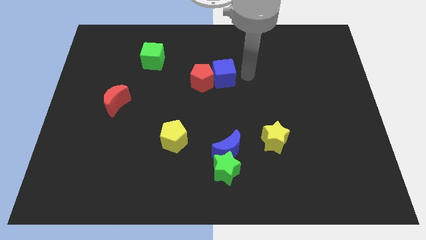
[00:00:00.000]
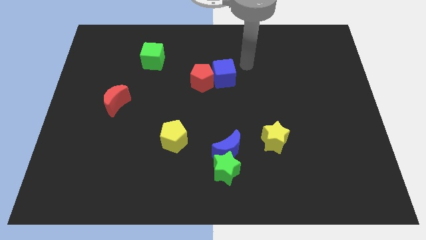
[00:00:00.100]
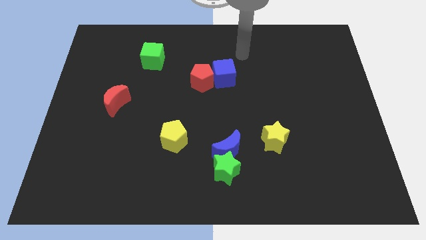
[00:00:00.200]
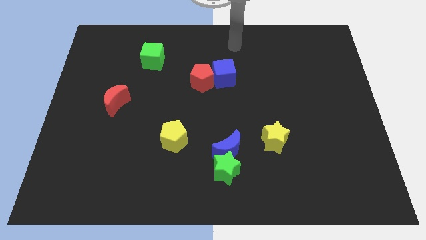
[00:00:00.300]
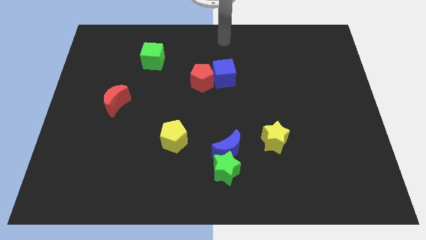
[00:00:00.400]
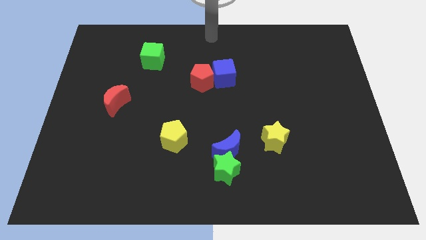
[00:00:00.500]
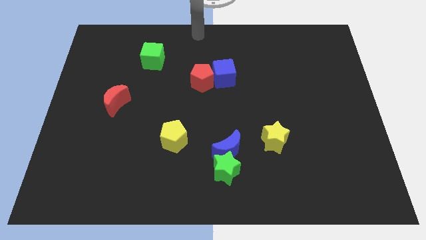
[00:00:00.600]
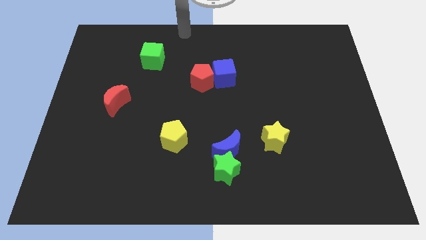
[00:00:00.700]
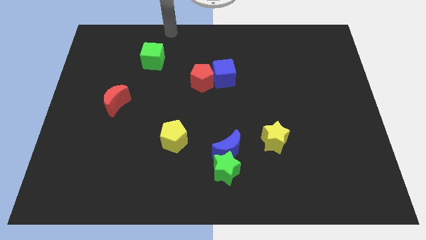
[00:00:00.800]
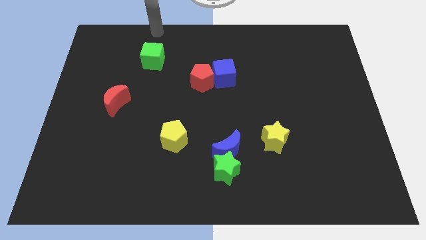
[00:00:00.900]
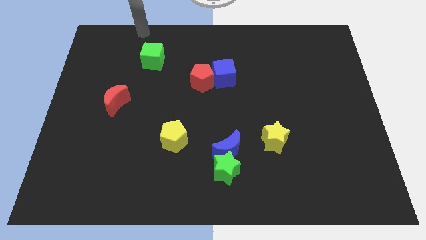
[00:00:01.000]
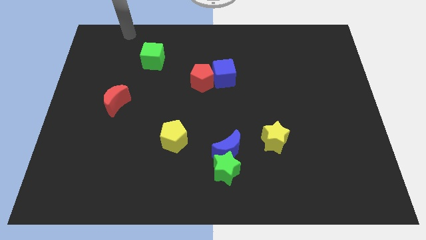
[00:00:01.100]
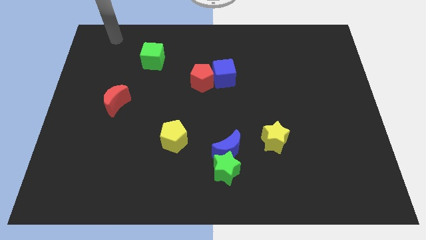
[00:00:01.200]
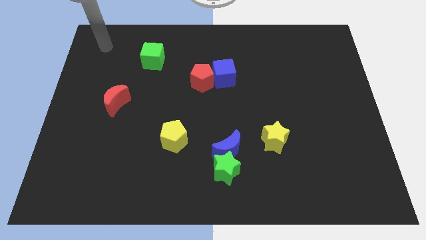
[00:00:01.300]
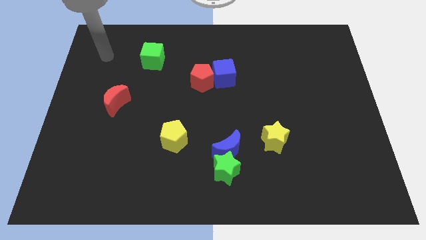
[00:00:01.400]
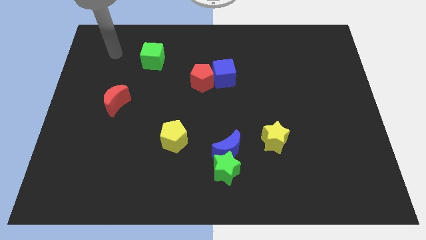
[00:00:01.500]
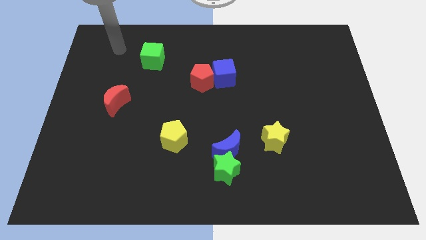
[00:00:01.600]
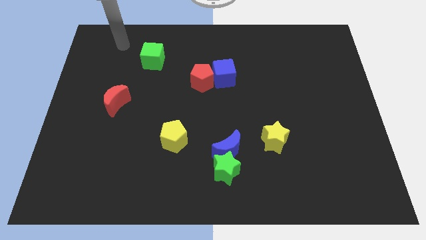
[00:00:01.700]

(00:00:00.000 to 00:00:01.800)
move the arm towards the green cube

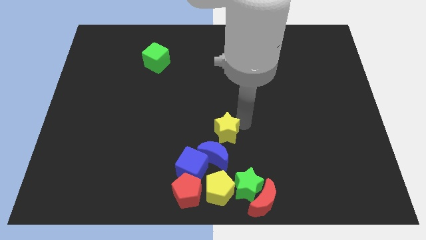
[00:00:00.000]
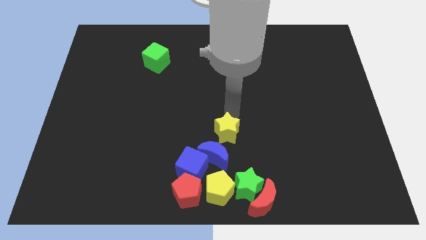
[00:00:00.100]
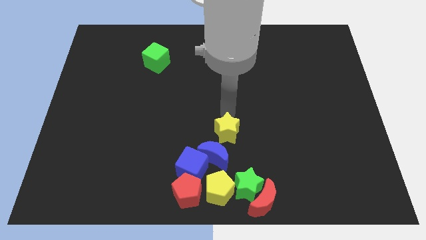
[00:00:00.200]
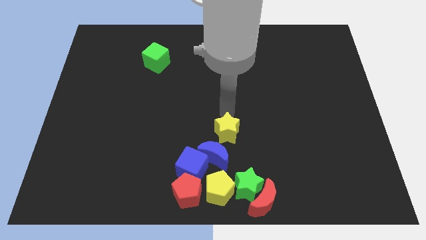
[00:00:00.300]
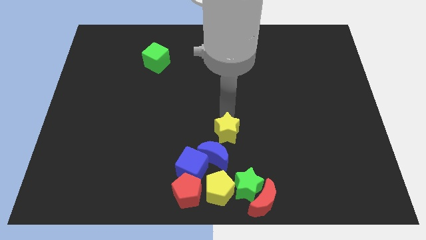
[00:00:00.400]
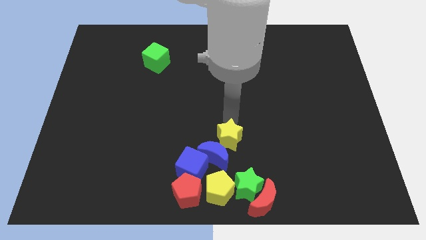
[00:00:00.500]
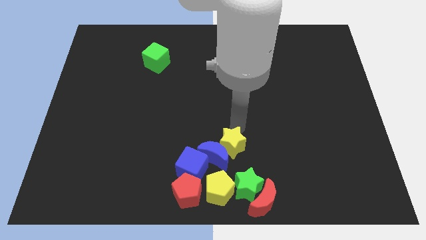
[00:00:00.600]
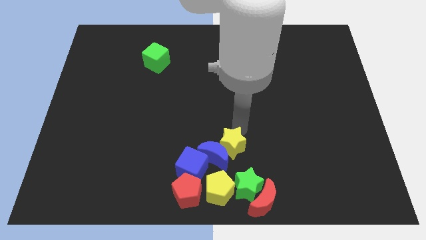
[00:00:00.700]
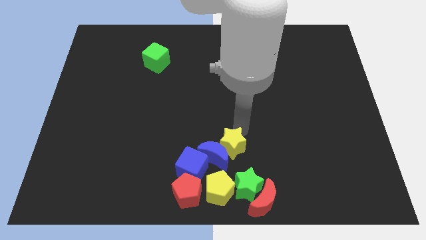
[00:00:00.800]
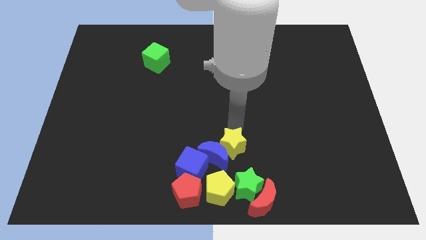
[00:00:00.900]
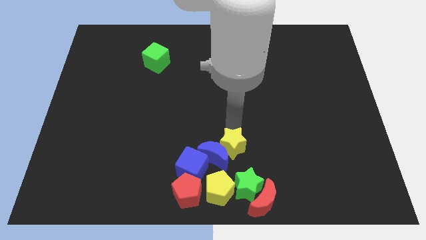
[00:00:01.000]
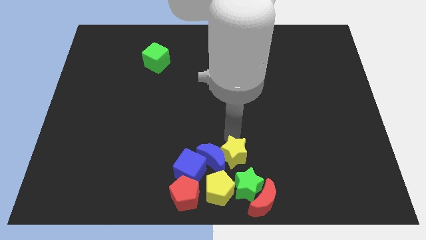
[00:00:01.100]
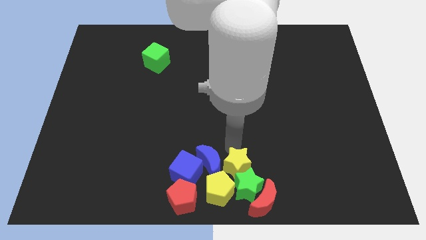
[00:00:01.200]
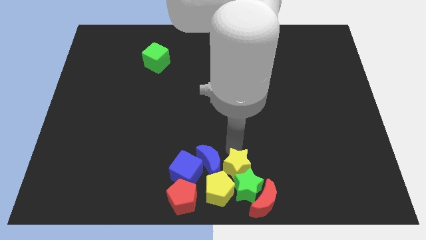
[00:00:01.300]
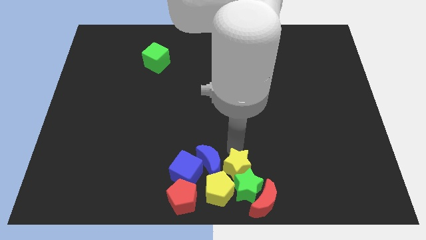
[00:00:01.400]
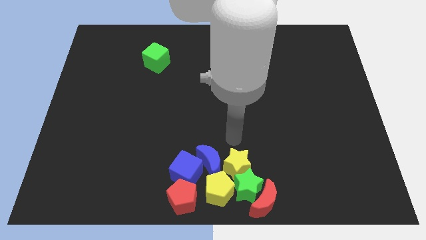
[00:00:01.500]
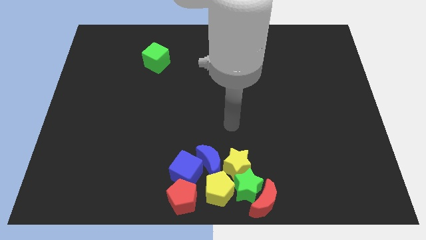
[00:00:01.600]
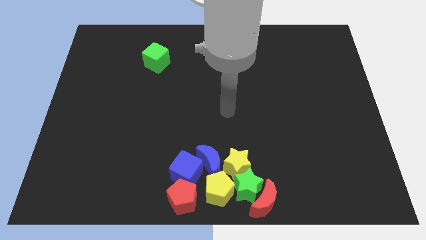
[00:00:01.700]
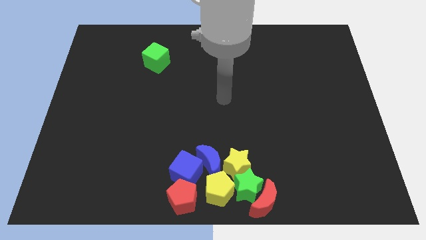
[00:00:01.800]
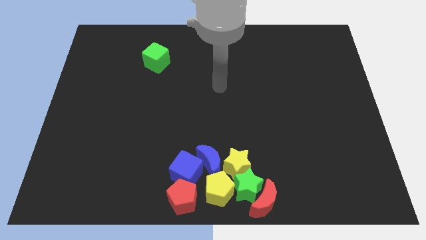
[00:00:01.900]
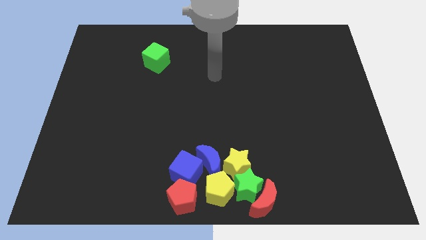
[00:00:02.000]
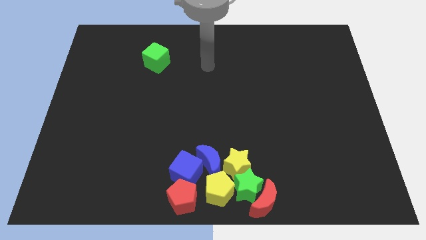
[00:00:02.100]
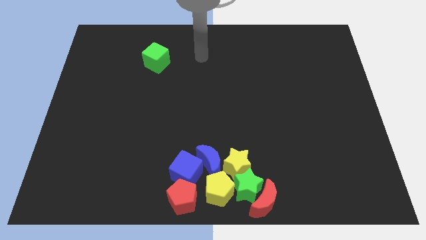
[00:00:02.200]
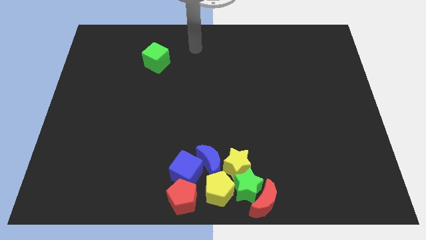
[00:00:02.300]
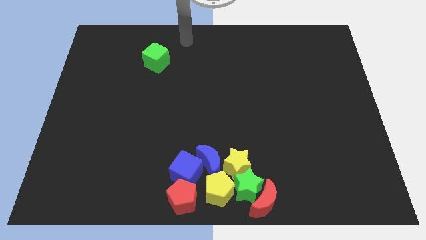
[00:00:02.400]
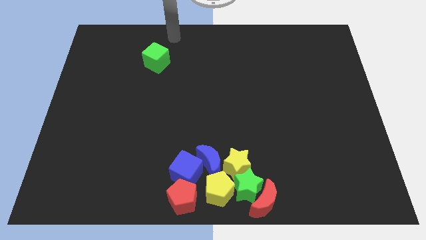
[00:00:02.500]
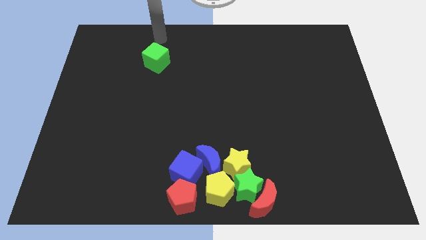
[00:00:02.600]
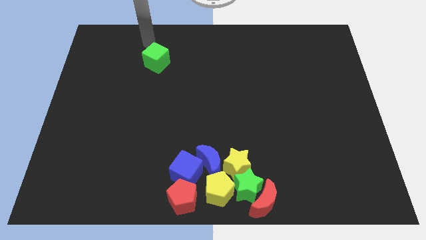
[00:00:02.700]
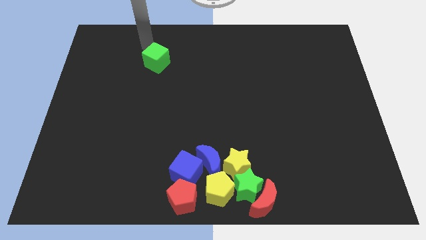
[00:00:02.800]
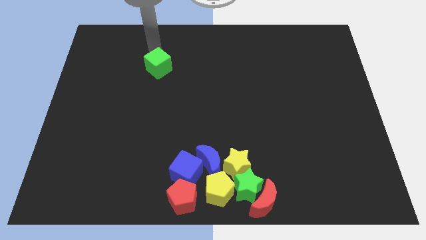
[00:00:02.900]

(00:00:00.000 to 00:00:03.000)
push the yellow star into the top side of the green star

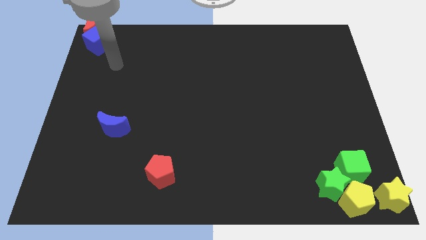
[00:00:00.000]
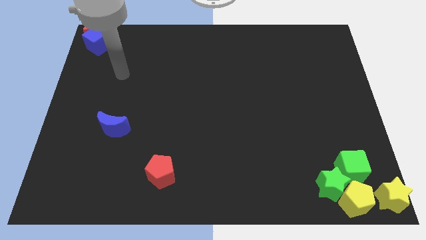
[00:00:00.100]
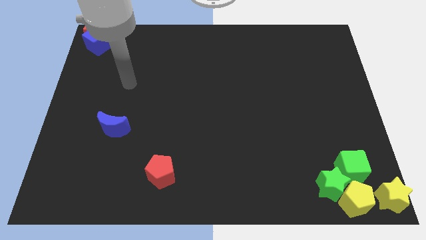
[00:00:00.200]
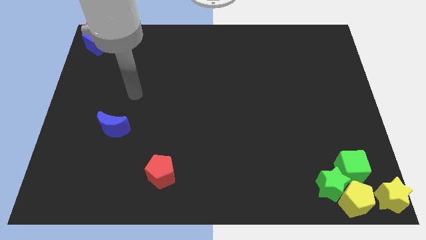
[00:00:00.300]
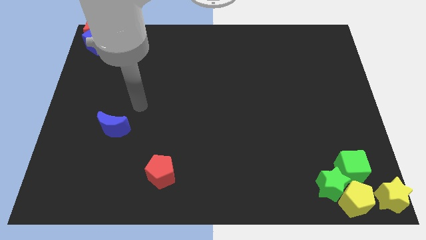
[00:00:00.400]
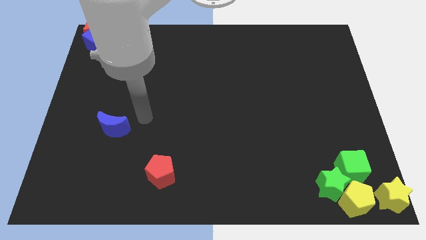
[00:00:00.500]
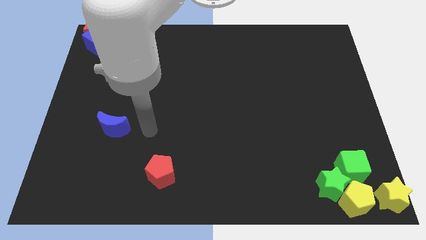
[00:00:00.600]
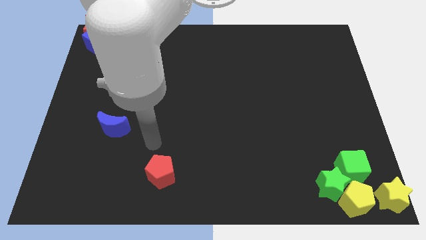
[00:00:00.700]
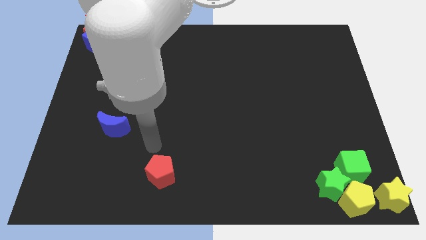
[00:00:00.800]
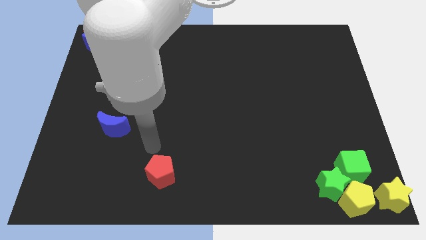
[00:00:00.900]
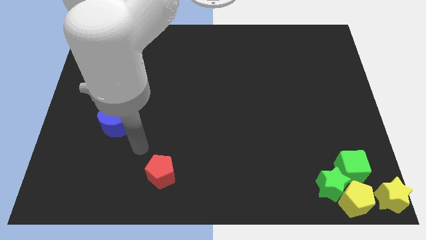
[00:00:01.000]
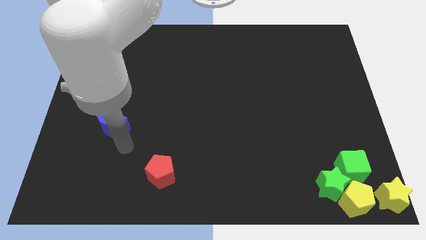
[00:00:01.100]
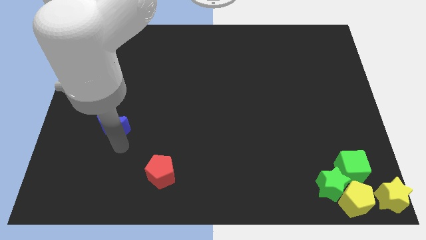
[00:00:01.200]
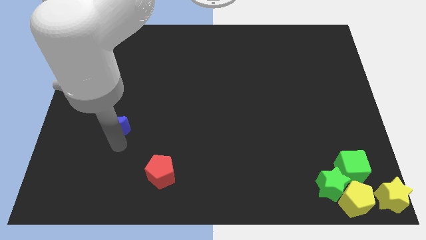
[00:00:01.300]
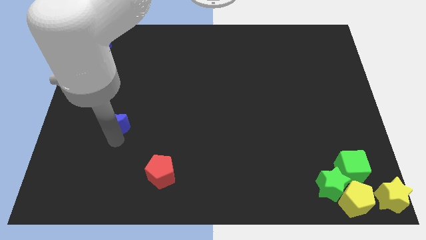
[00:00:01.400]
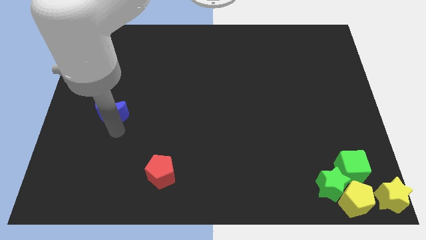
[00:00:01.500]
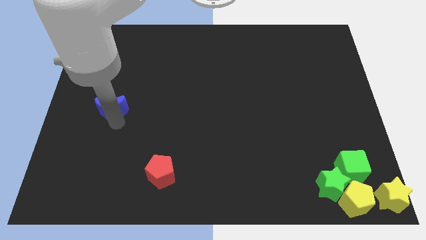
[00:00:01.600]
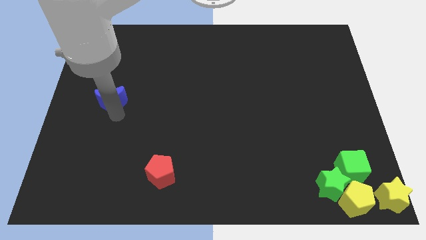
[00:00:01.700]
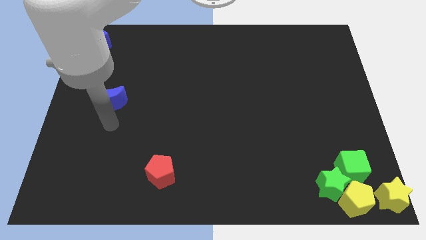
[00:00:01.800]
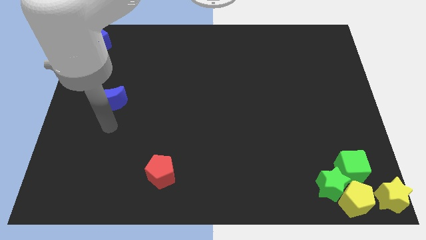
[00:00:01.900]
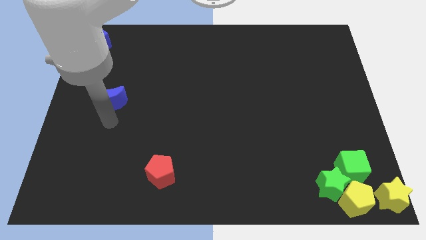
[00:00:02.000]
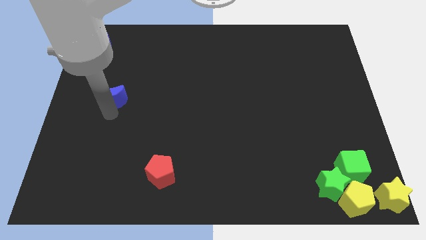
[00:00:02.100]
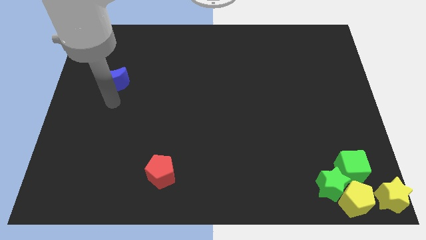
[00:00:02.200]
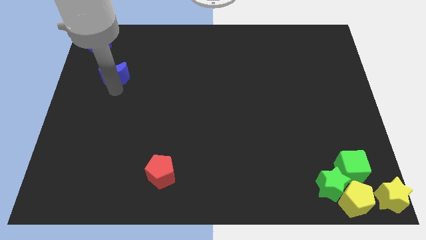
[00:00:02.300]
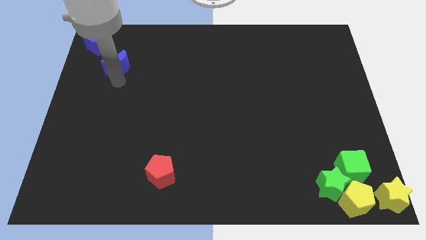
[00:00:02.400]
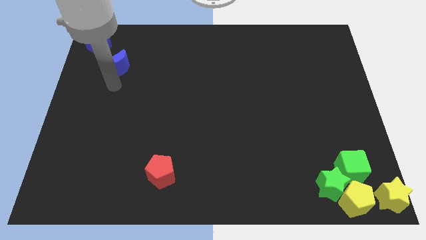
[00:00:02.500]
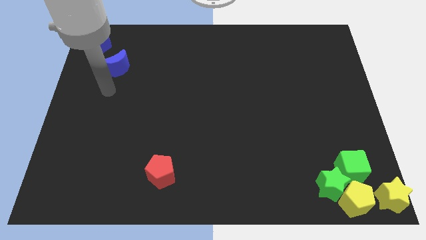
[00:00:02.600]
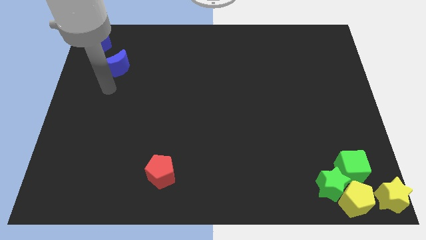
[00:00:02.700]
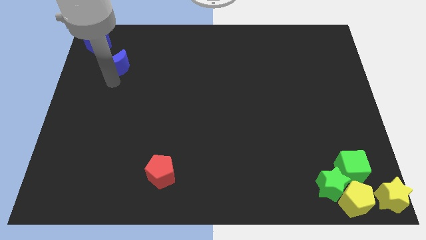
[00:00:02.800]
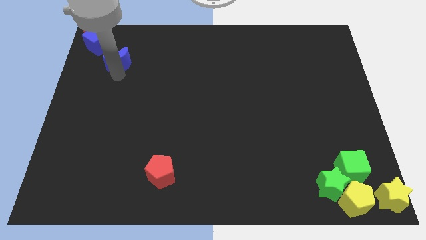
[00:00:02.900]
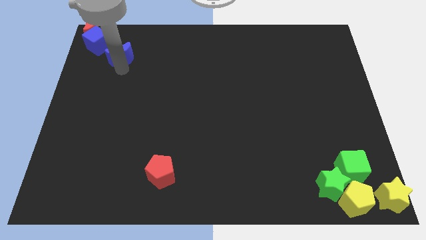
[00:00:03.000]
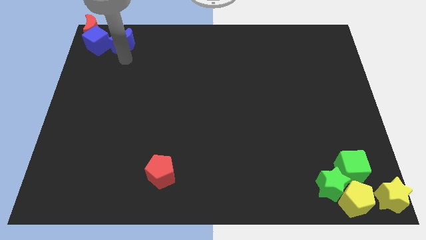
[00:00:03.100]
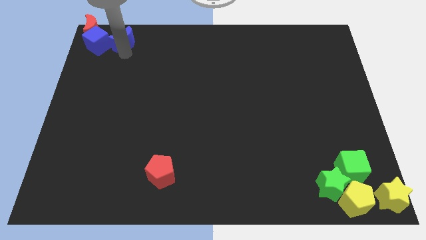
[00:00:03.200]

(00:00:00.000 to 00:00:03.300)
move the blue moon towards top left corner of the board

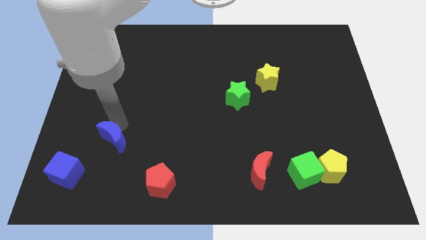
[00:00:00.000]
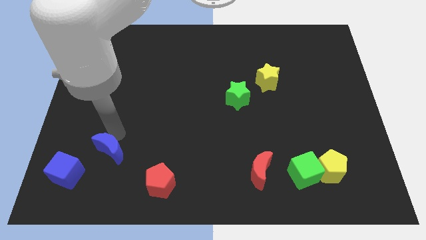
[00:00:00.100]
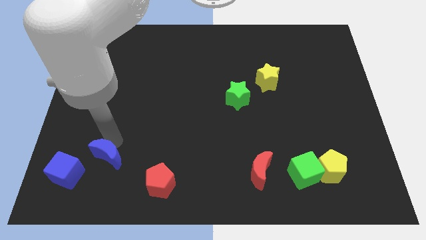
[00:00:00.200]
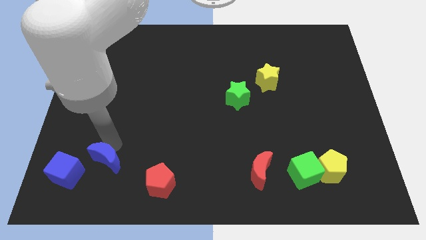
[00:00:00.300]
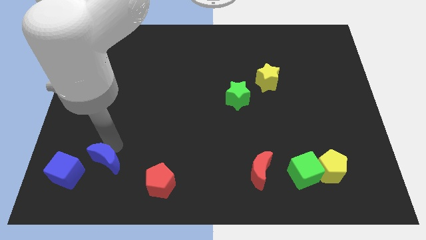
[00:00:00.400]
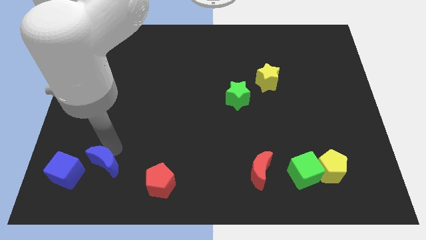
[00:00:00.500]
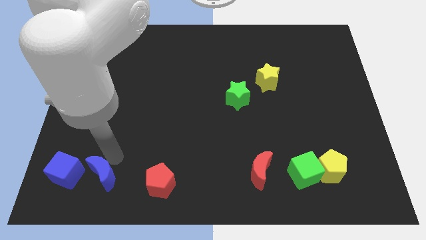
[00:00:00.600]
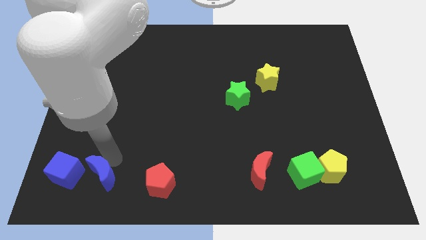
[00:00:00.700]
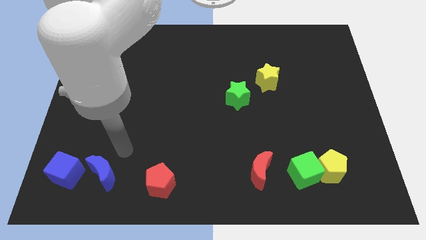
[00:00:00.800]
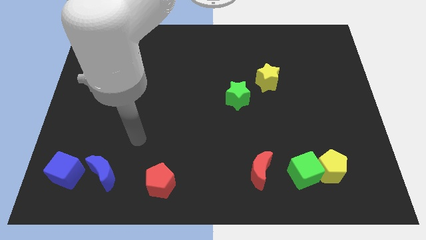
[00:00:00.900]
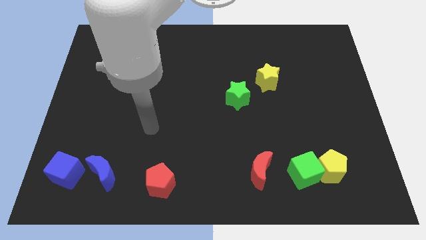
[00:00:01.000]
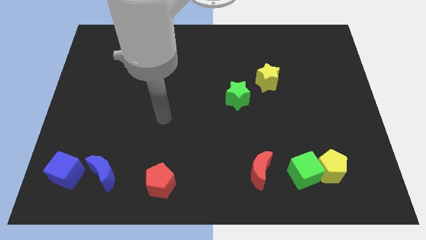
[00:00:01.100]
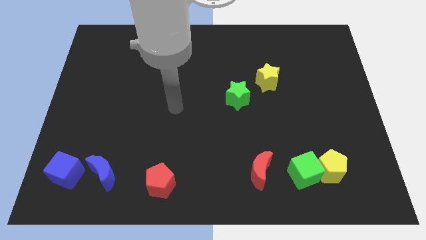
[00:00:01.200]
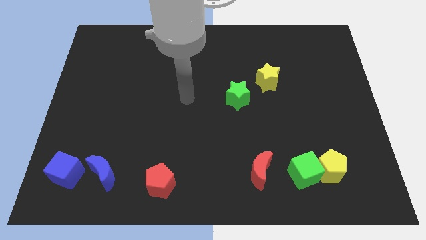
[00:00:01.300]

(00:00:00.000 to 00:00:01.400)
place the blue crescent in between the blue cubered pentagon
